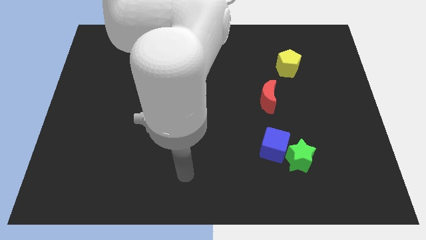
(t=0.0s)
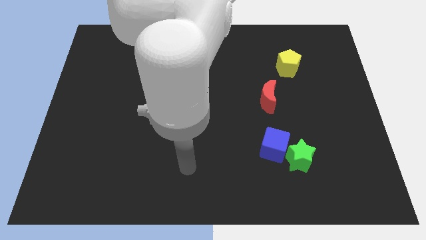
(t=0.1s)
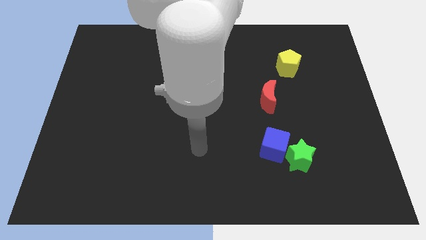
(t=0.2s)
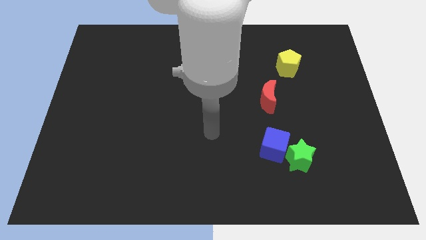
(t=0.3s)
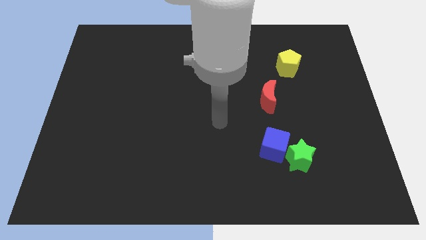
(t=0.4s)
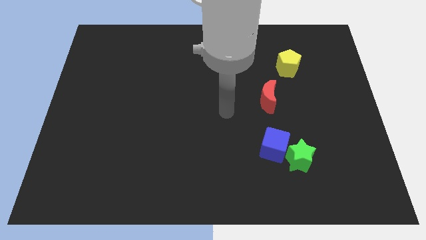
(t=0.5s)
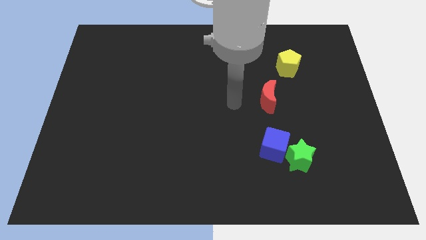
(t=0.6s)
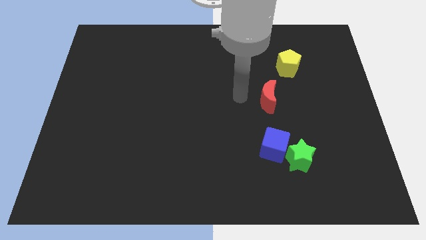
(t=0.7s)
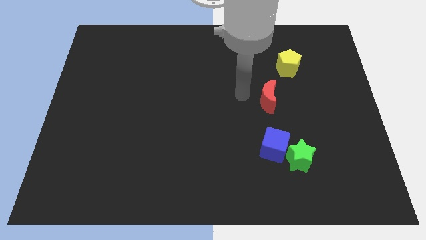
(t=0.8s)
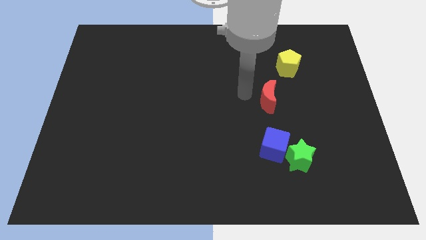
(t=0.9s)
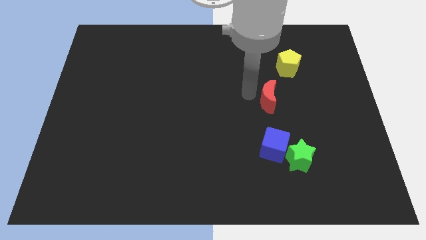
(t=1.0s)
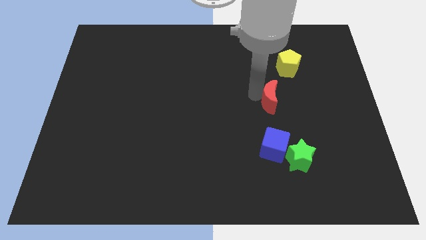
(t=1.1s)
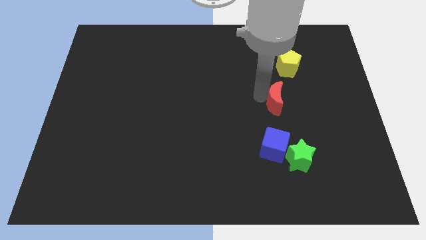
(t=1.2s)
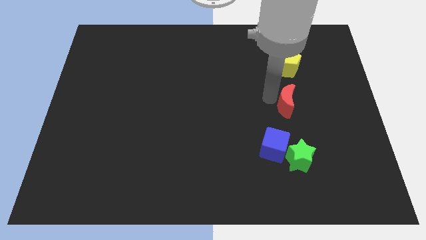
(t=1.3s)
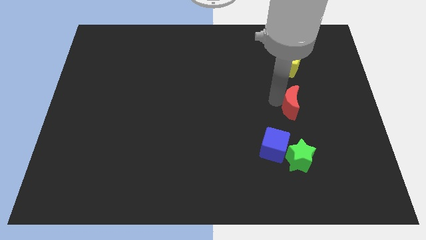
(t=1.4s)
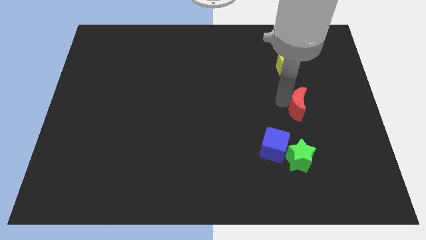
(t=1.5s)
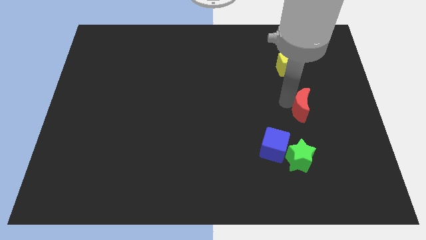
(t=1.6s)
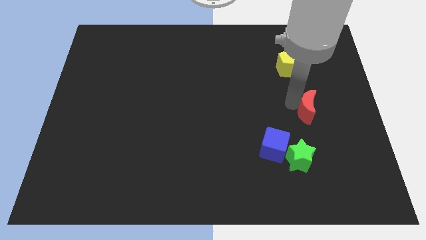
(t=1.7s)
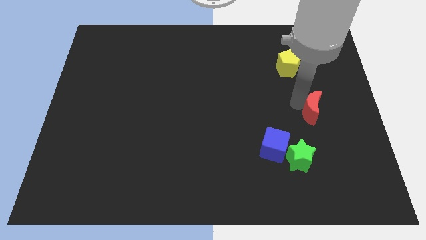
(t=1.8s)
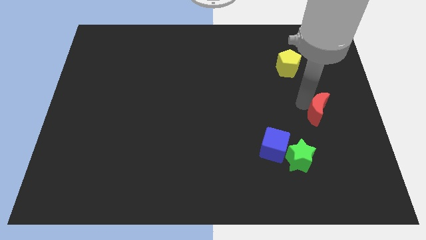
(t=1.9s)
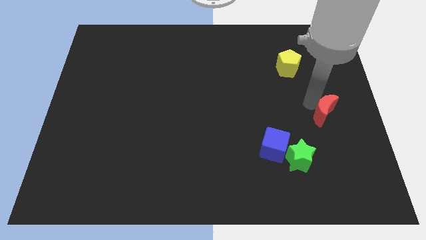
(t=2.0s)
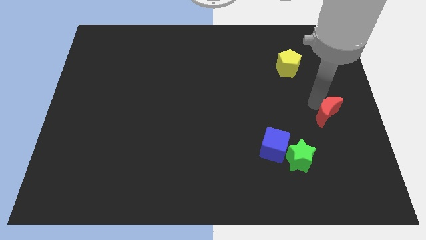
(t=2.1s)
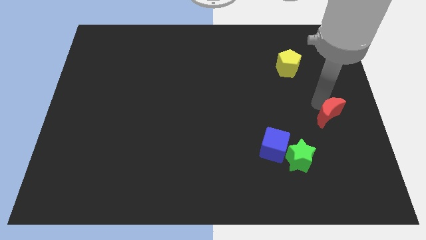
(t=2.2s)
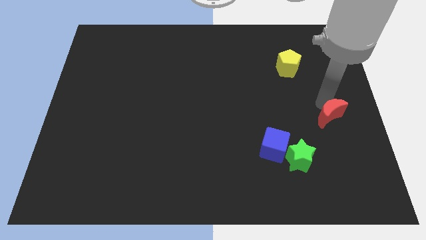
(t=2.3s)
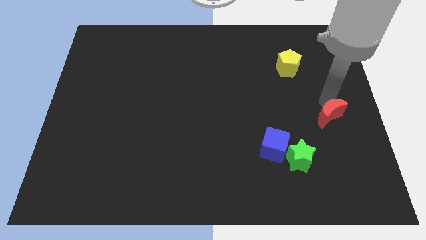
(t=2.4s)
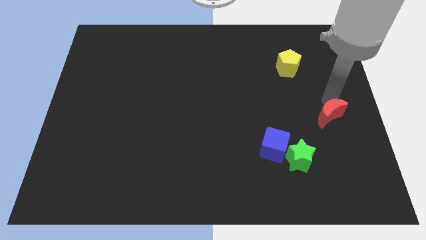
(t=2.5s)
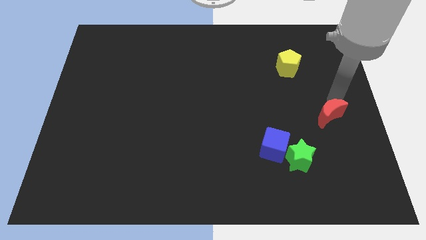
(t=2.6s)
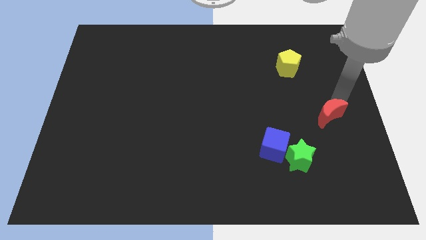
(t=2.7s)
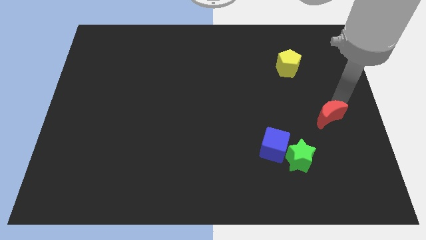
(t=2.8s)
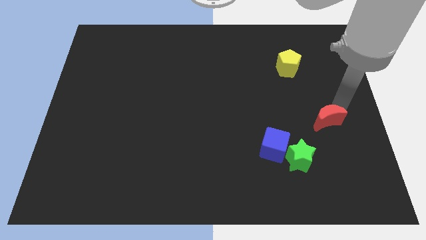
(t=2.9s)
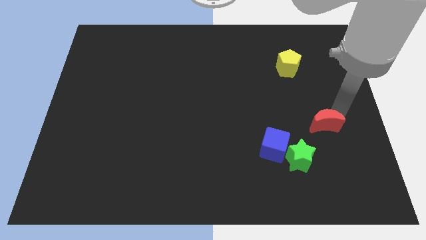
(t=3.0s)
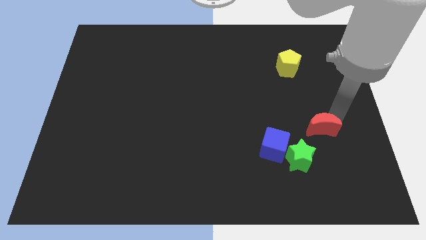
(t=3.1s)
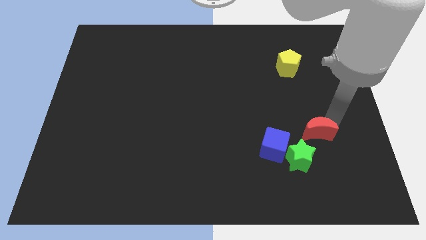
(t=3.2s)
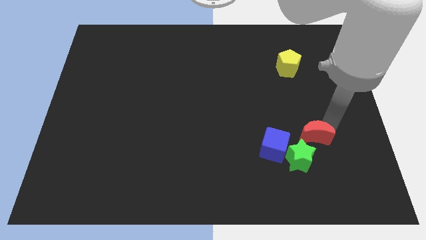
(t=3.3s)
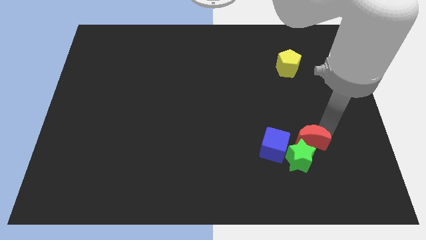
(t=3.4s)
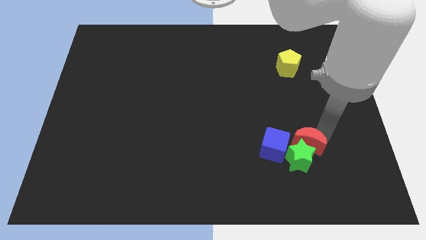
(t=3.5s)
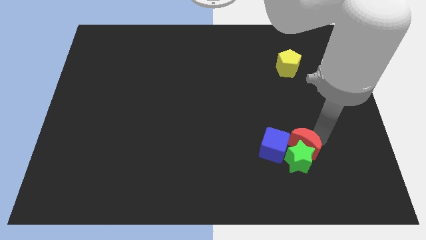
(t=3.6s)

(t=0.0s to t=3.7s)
slide the red block towards the green star

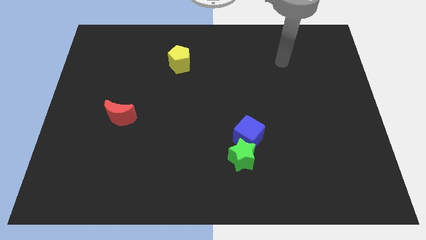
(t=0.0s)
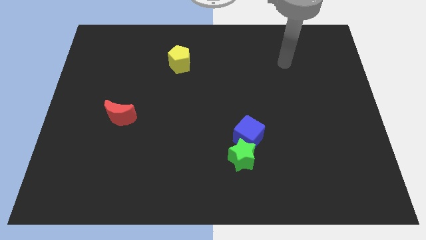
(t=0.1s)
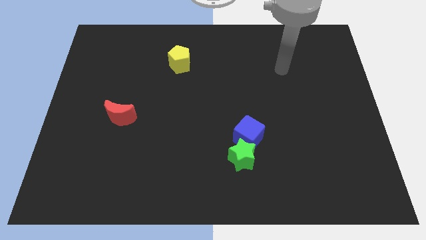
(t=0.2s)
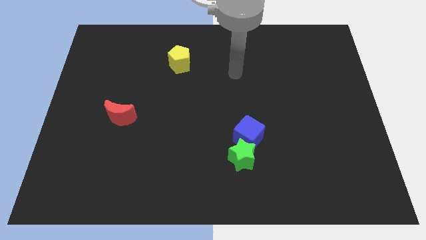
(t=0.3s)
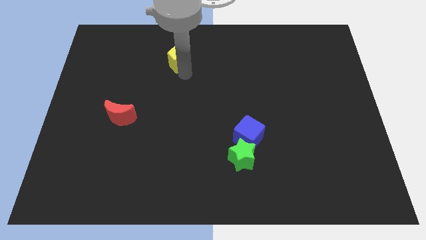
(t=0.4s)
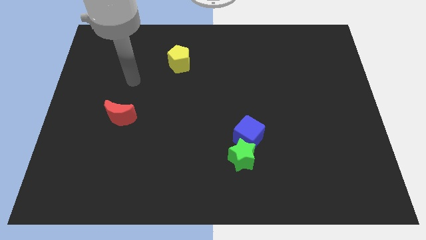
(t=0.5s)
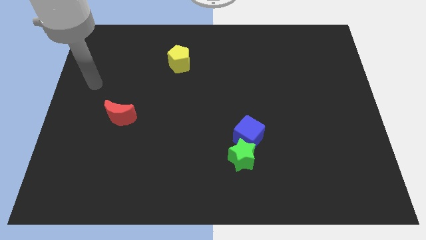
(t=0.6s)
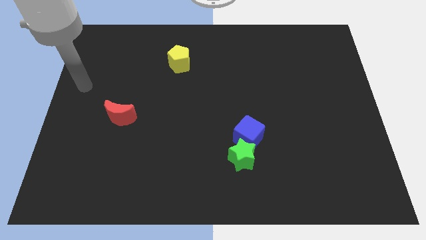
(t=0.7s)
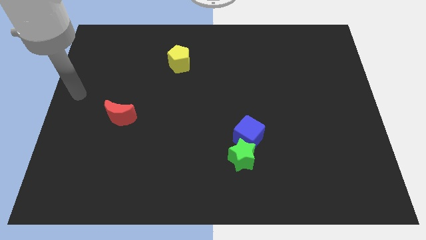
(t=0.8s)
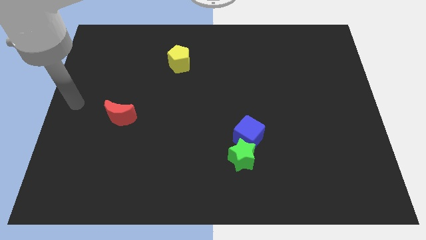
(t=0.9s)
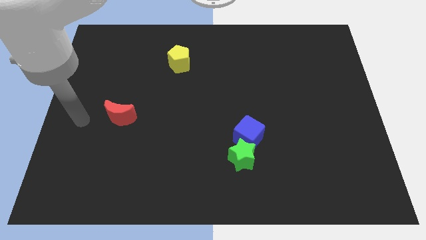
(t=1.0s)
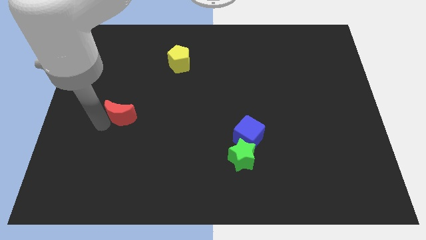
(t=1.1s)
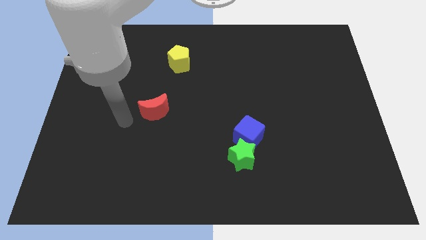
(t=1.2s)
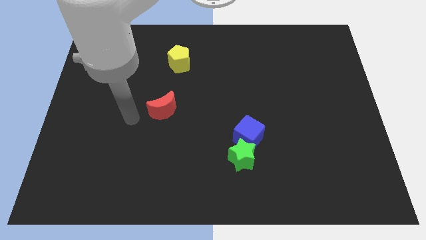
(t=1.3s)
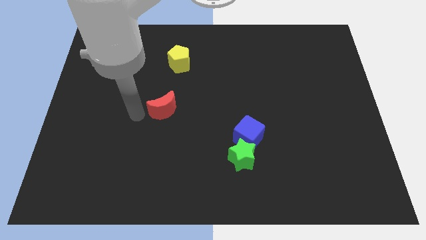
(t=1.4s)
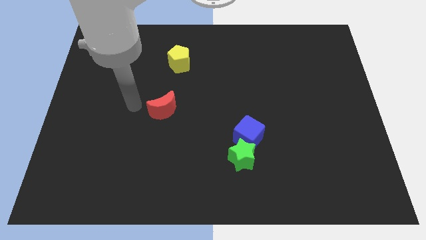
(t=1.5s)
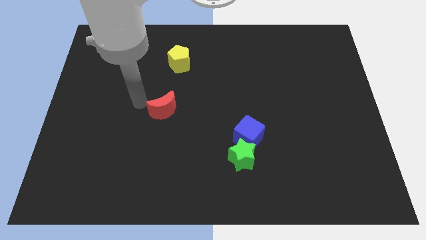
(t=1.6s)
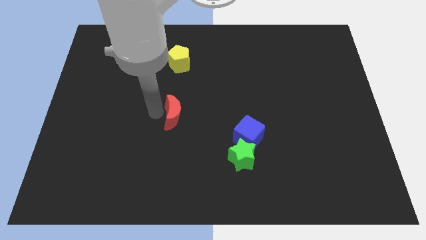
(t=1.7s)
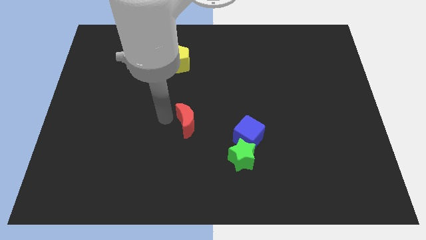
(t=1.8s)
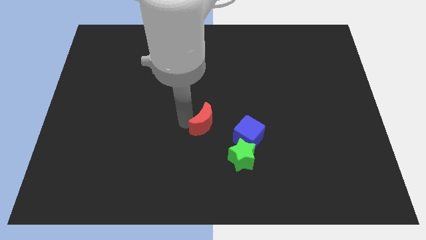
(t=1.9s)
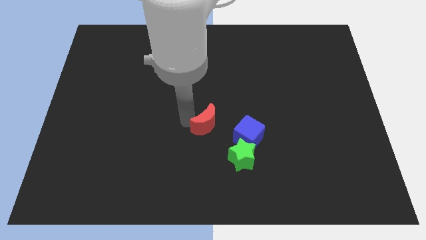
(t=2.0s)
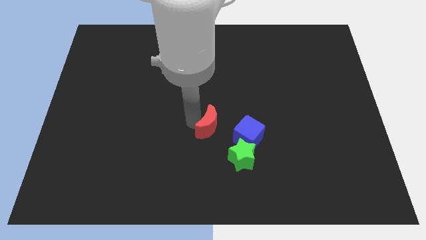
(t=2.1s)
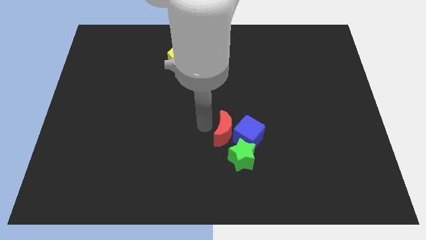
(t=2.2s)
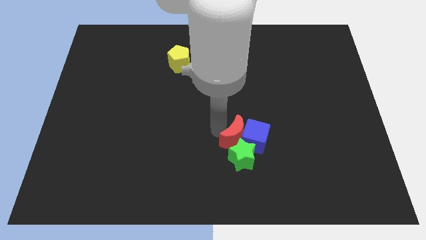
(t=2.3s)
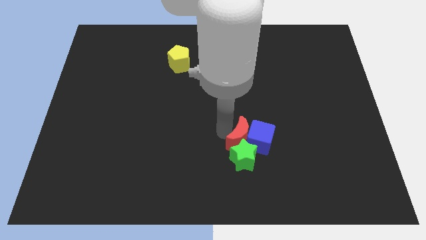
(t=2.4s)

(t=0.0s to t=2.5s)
slide the red moon to the blue block

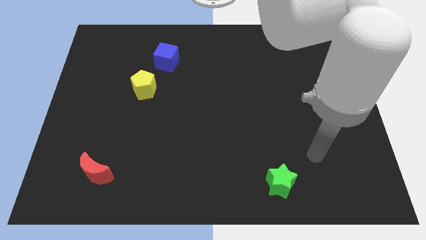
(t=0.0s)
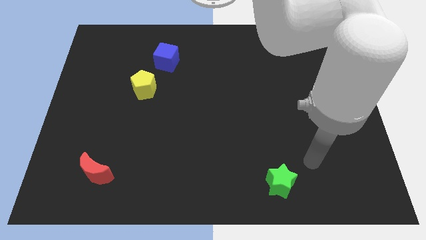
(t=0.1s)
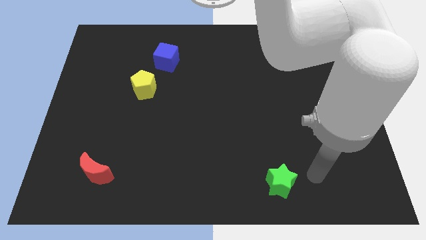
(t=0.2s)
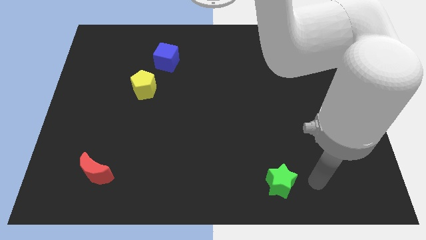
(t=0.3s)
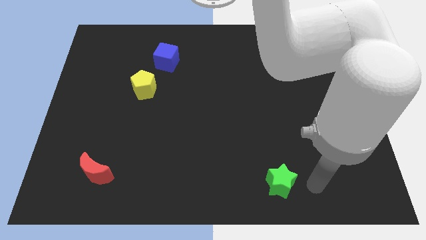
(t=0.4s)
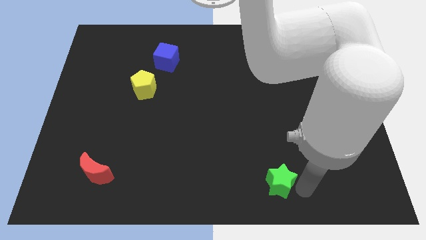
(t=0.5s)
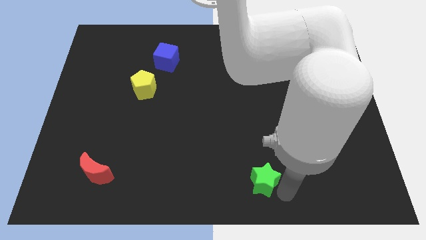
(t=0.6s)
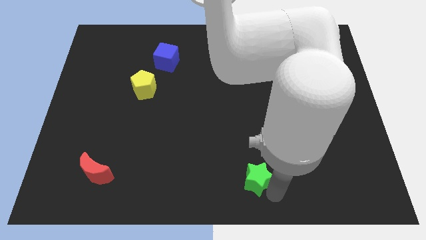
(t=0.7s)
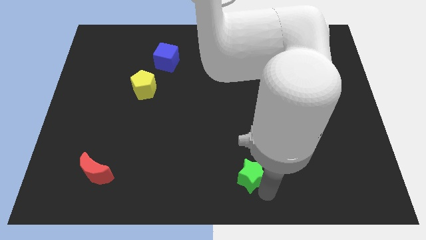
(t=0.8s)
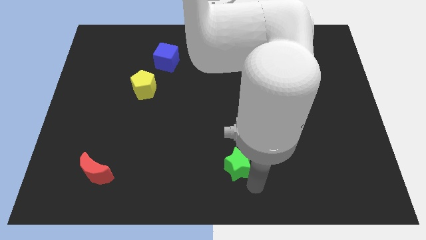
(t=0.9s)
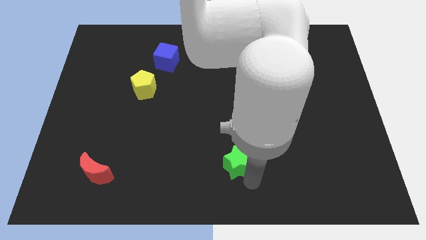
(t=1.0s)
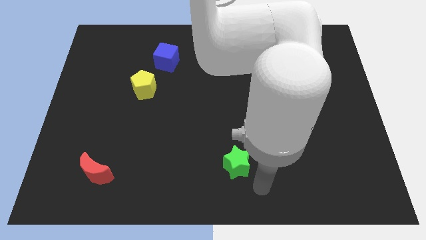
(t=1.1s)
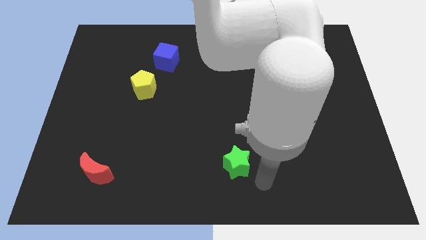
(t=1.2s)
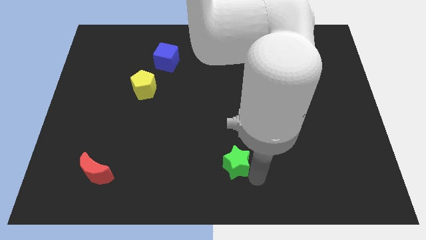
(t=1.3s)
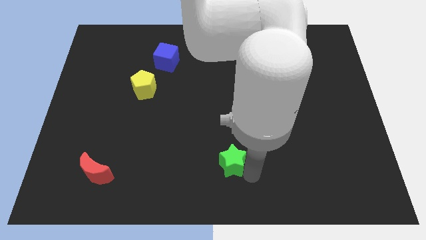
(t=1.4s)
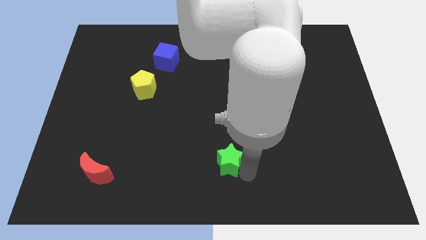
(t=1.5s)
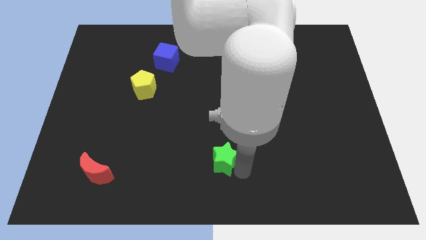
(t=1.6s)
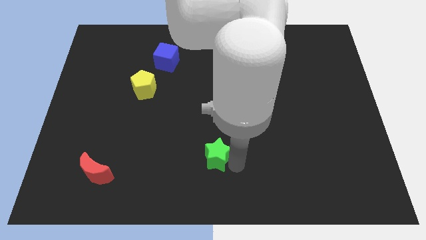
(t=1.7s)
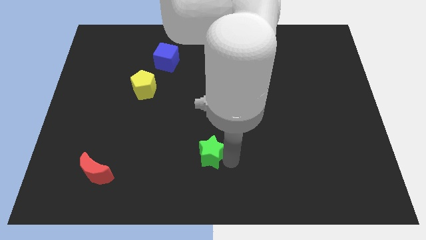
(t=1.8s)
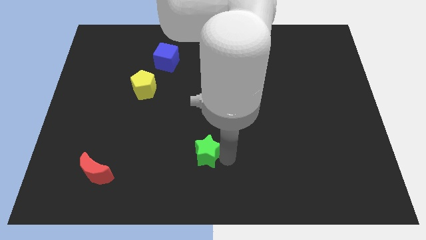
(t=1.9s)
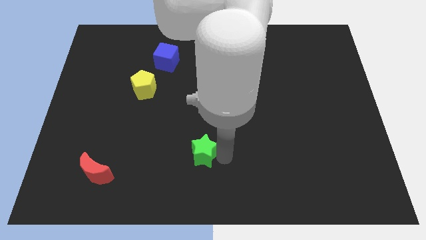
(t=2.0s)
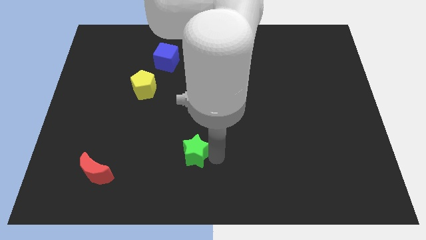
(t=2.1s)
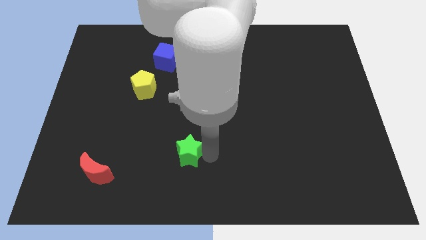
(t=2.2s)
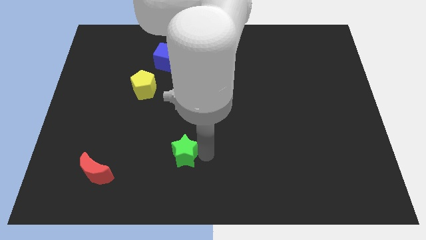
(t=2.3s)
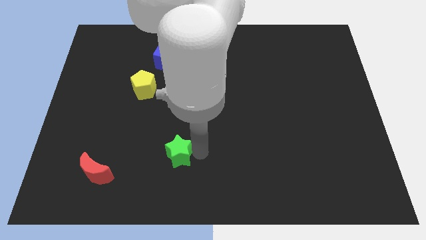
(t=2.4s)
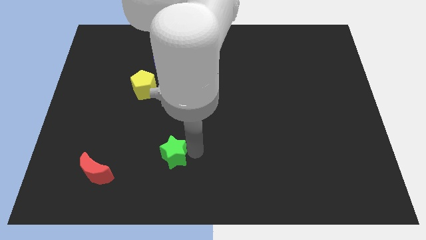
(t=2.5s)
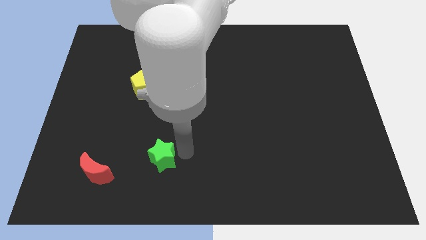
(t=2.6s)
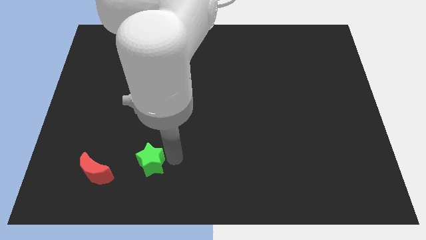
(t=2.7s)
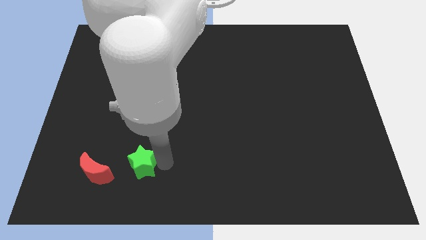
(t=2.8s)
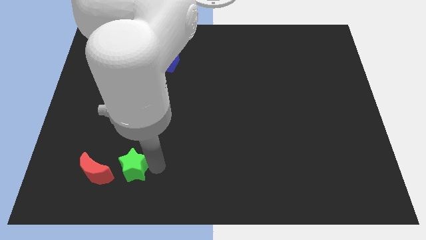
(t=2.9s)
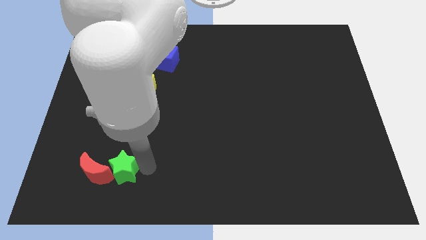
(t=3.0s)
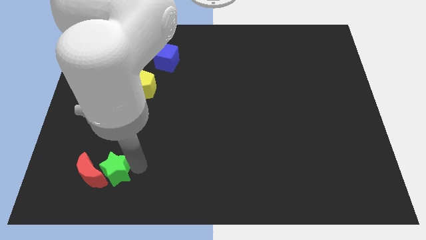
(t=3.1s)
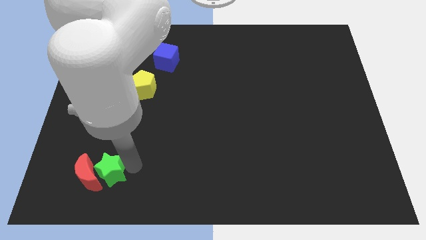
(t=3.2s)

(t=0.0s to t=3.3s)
put the green block close to the moon
